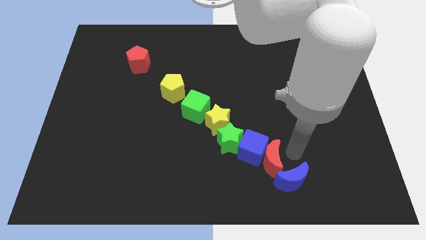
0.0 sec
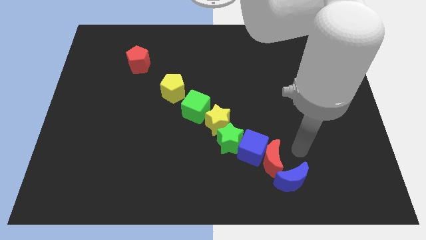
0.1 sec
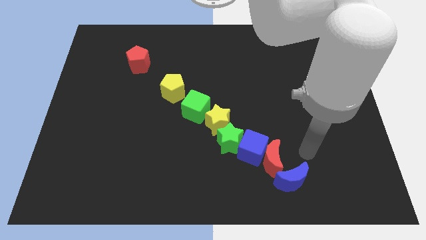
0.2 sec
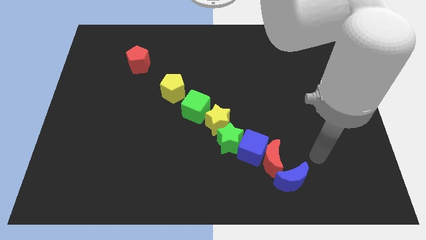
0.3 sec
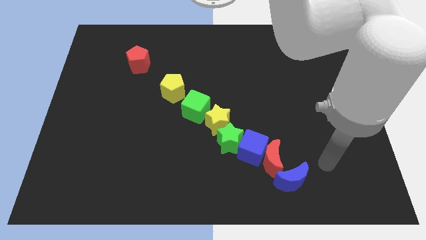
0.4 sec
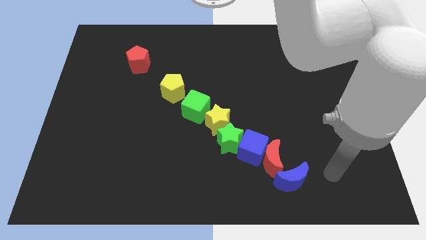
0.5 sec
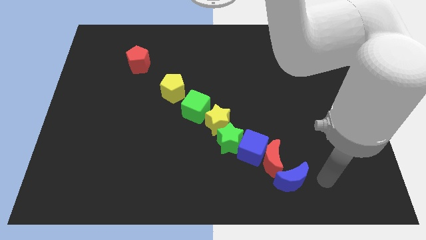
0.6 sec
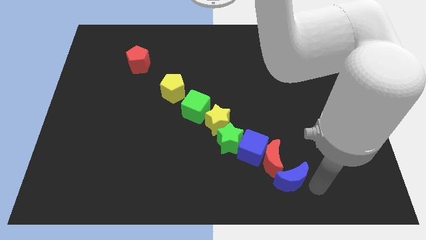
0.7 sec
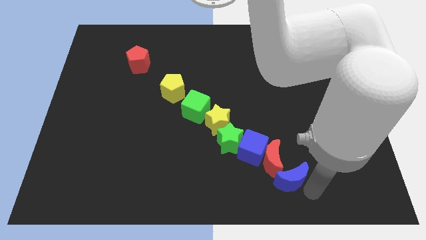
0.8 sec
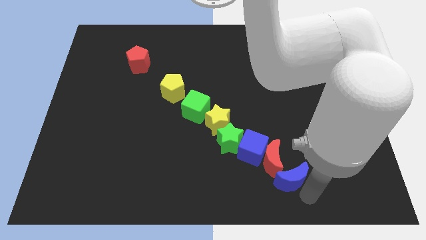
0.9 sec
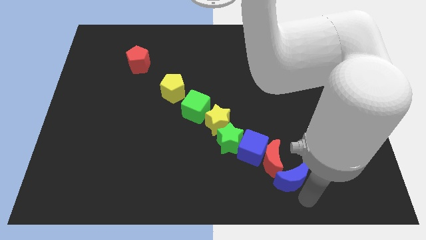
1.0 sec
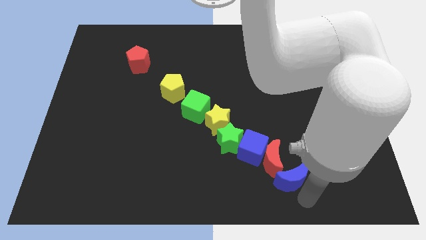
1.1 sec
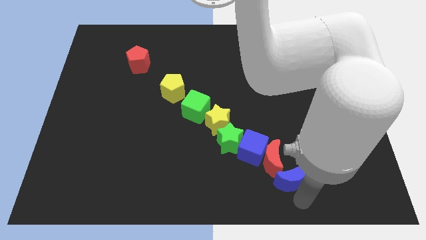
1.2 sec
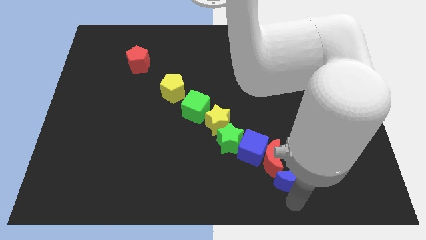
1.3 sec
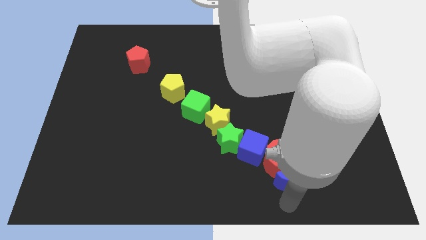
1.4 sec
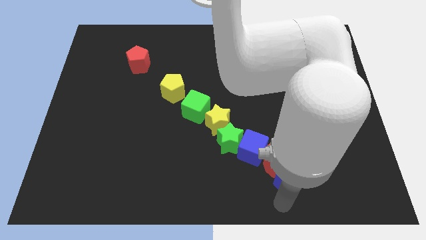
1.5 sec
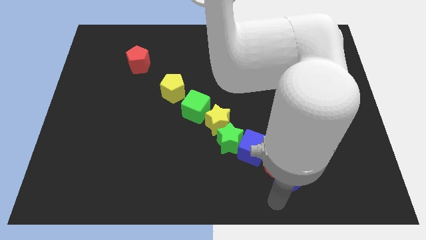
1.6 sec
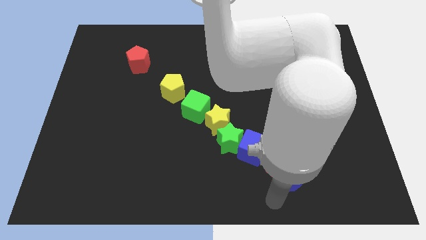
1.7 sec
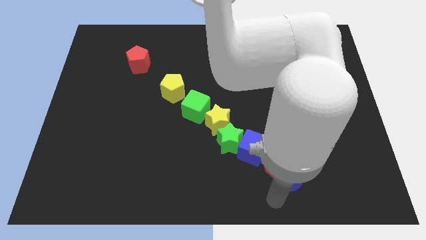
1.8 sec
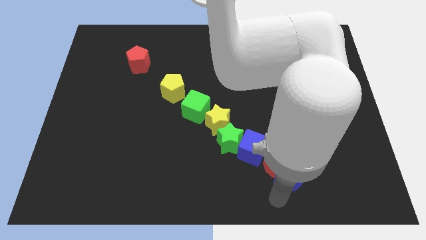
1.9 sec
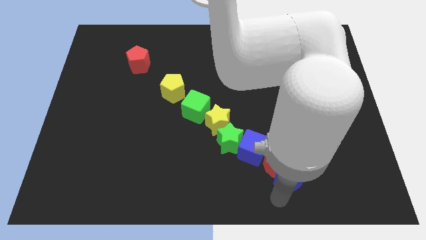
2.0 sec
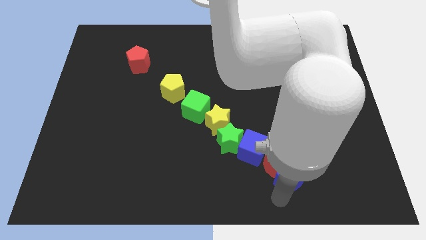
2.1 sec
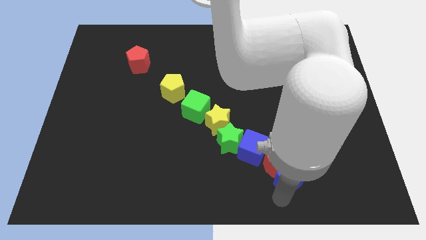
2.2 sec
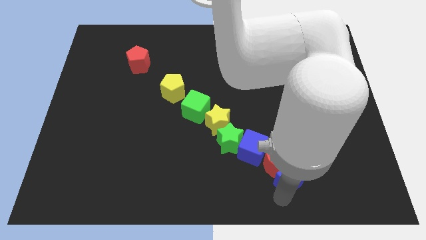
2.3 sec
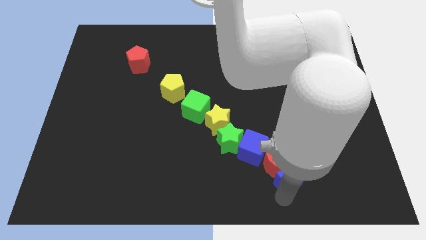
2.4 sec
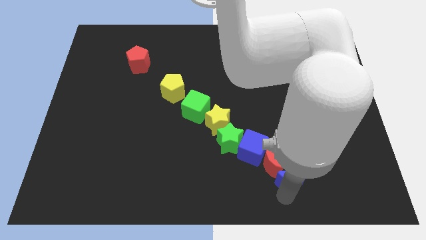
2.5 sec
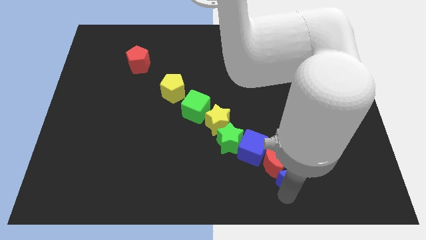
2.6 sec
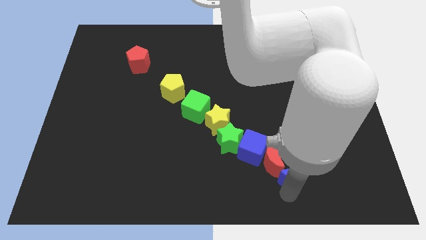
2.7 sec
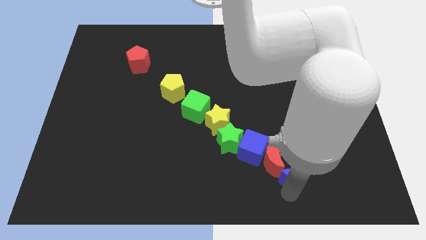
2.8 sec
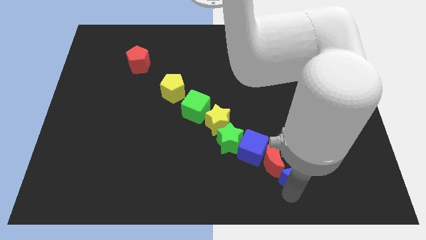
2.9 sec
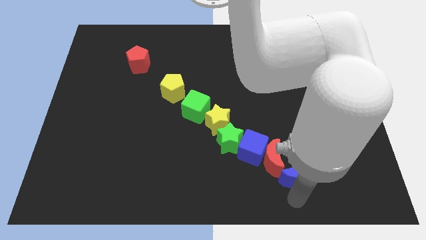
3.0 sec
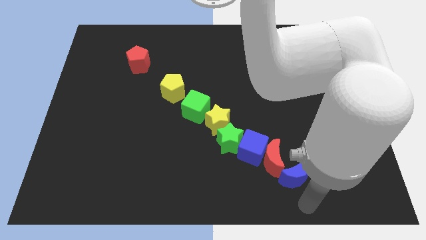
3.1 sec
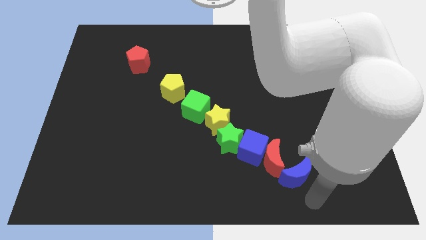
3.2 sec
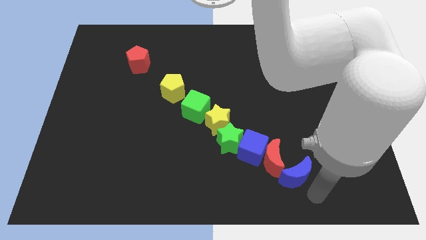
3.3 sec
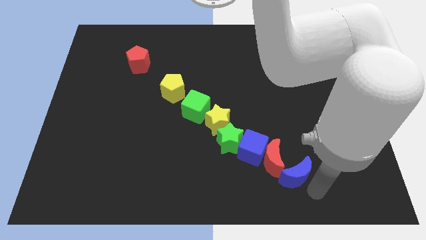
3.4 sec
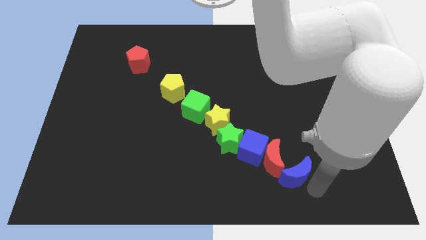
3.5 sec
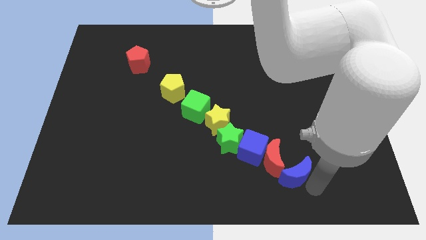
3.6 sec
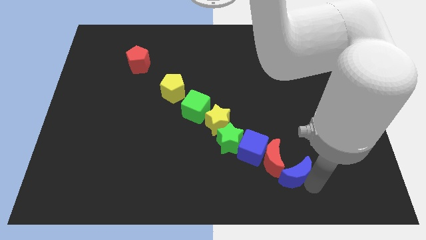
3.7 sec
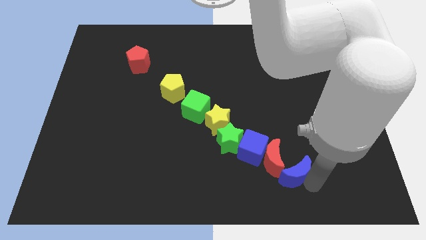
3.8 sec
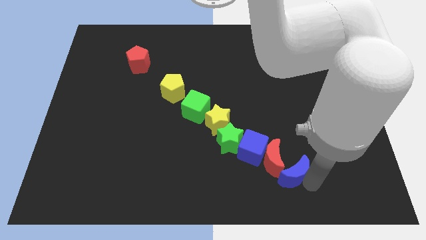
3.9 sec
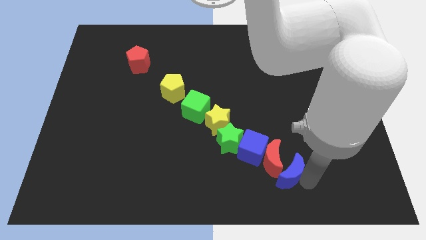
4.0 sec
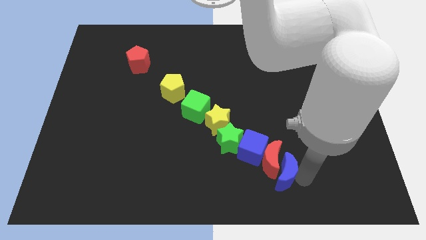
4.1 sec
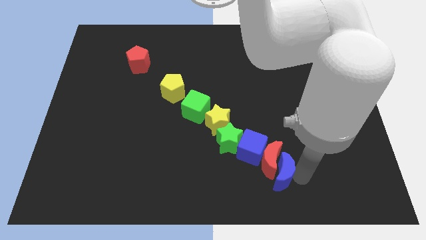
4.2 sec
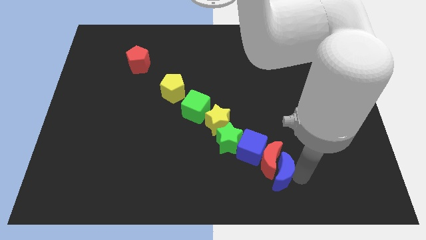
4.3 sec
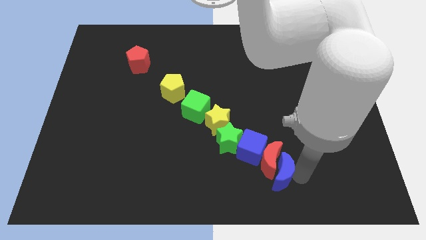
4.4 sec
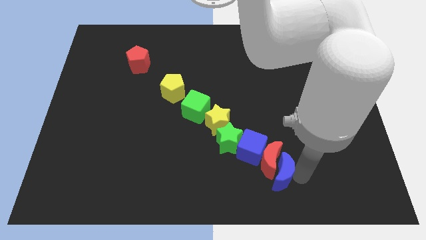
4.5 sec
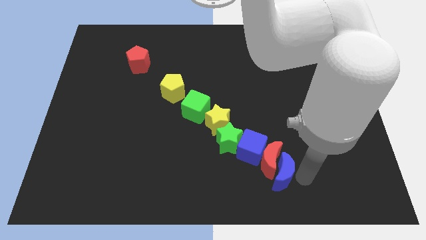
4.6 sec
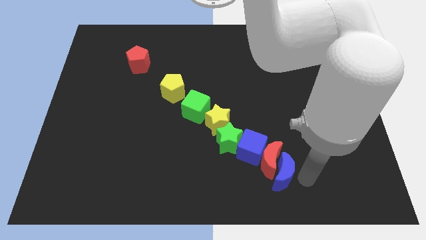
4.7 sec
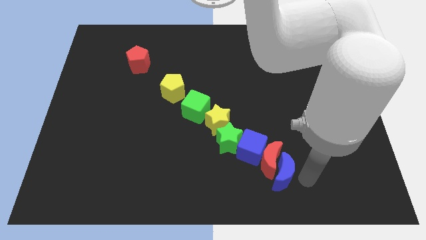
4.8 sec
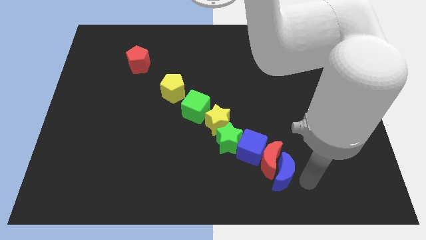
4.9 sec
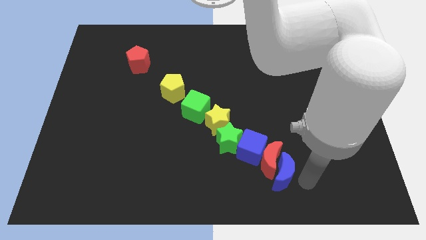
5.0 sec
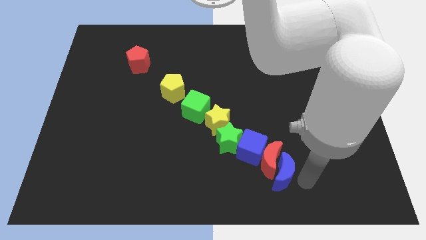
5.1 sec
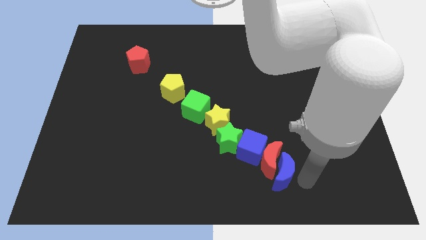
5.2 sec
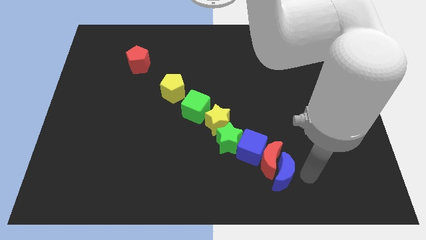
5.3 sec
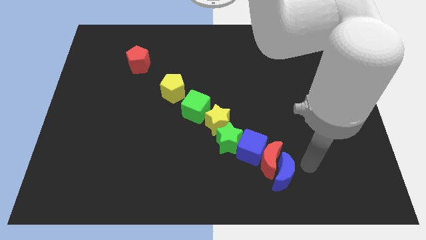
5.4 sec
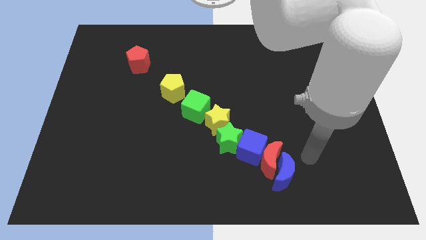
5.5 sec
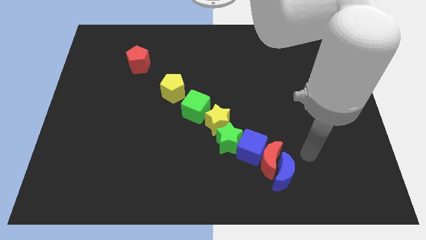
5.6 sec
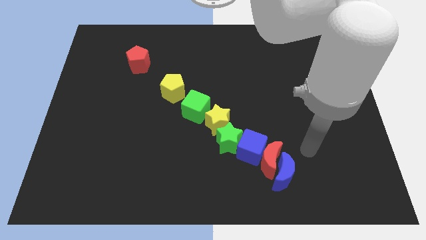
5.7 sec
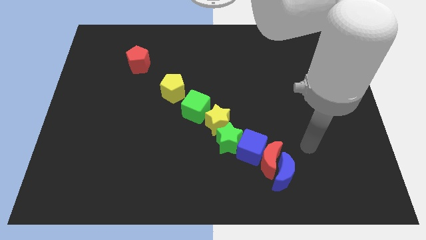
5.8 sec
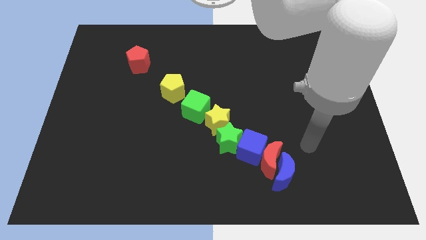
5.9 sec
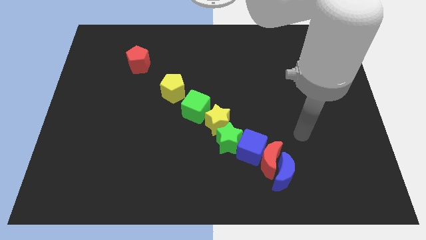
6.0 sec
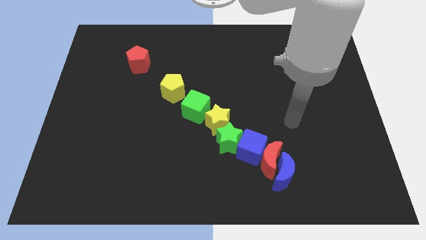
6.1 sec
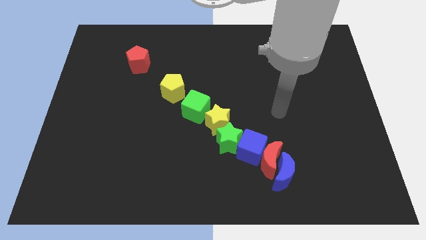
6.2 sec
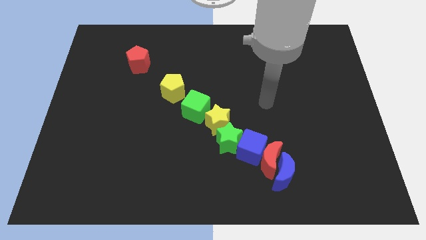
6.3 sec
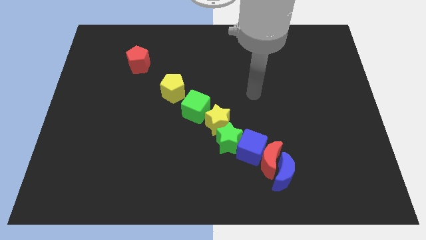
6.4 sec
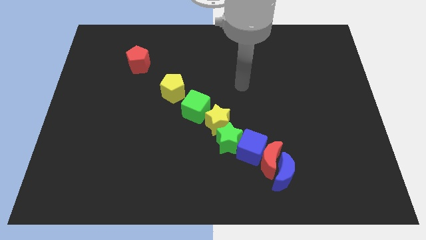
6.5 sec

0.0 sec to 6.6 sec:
push the blue moon into the red moon

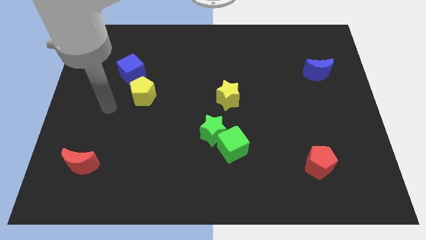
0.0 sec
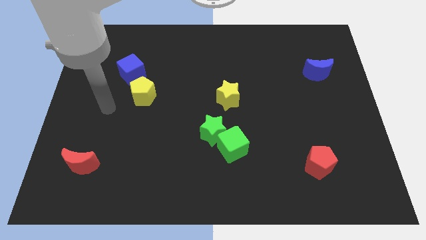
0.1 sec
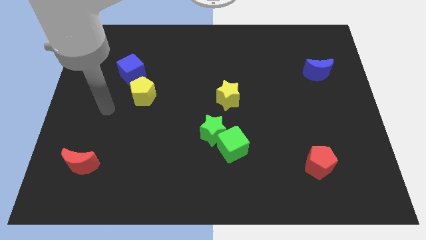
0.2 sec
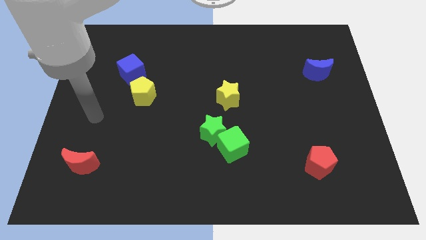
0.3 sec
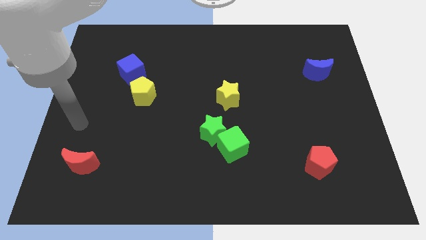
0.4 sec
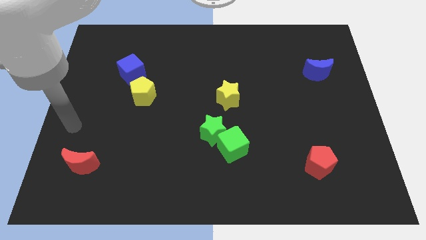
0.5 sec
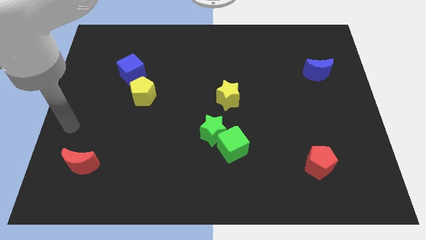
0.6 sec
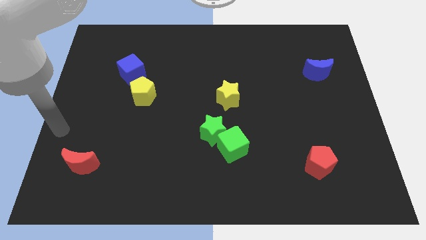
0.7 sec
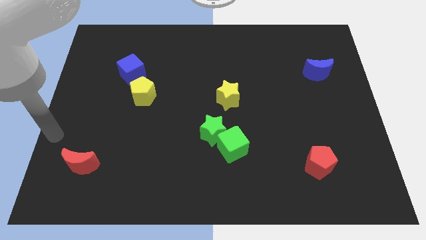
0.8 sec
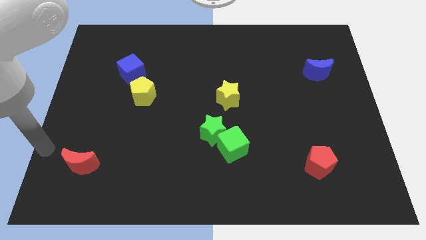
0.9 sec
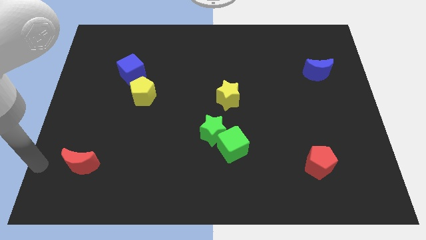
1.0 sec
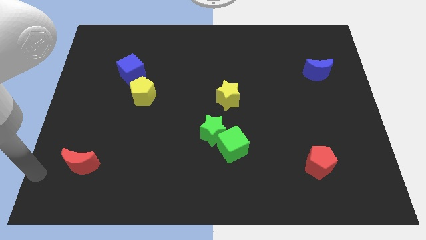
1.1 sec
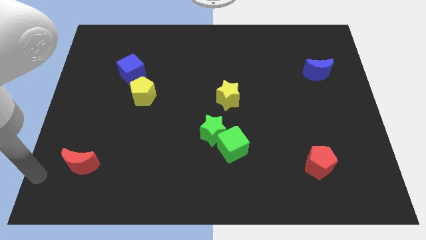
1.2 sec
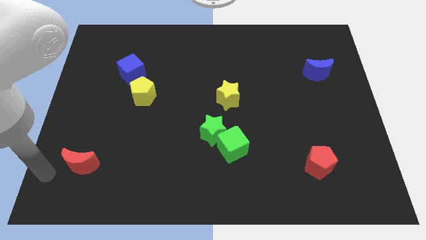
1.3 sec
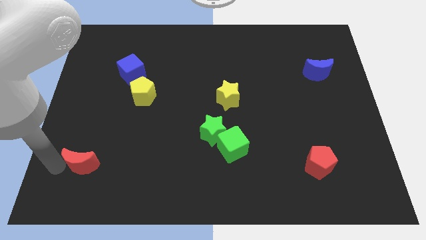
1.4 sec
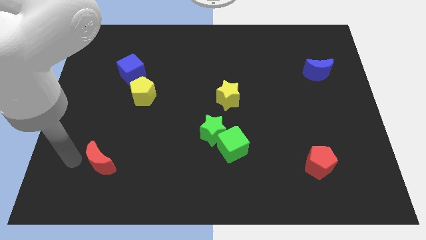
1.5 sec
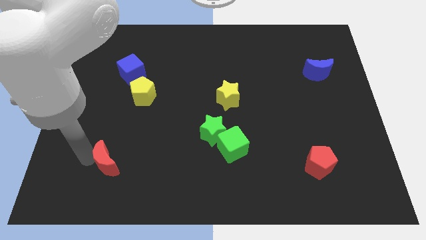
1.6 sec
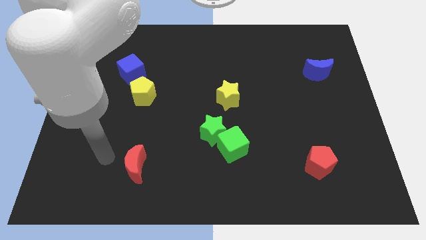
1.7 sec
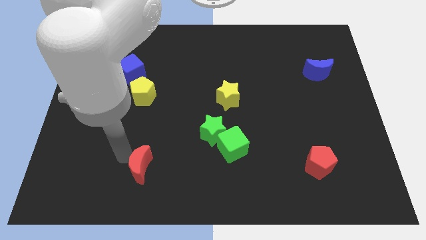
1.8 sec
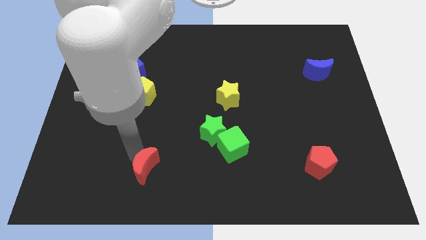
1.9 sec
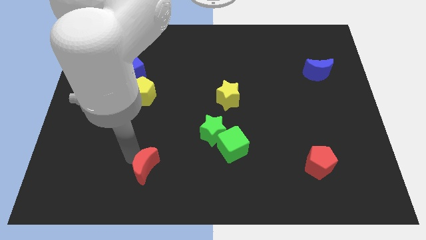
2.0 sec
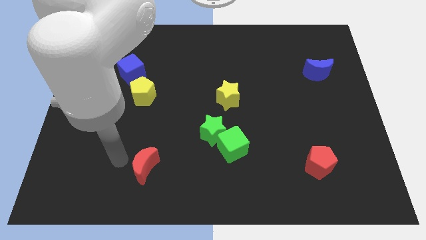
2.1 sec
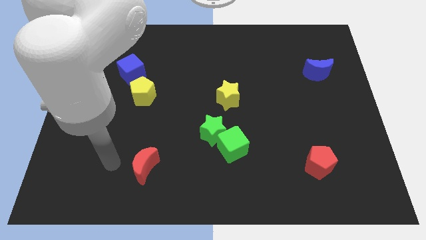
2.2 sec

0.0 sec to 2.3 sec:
push the red crescent parallel to the left of the green star

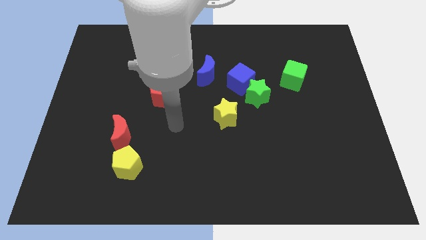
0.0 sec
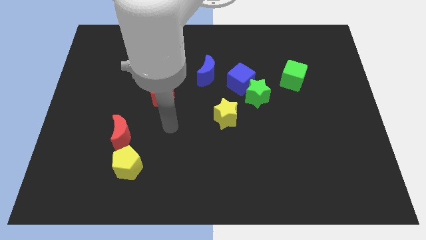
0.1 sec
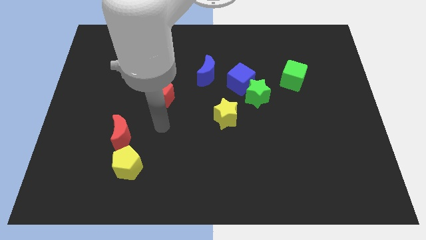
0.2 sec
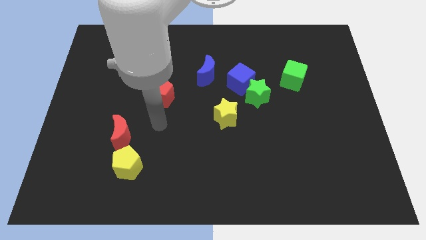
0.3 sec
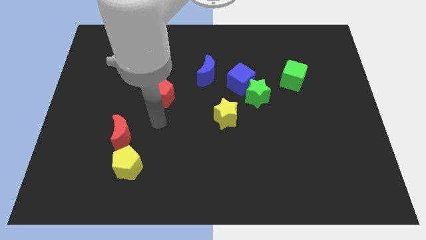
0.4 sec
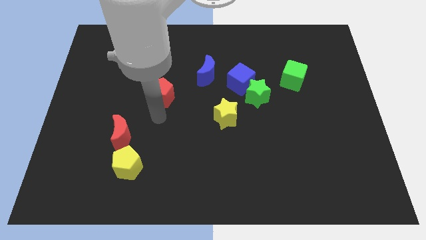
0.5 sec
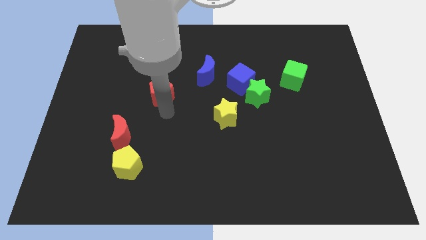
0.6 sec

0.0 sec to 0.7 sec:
touch the red pentagon
